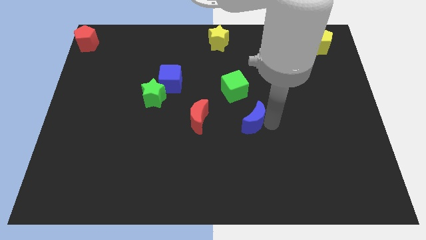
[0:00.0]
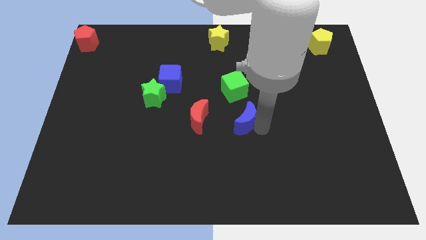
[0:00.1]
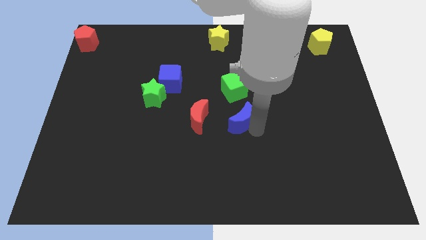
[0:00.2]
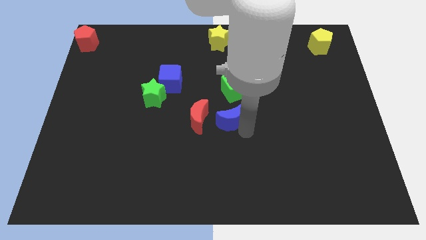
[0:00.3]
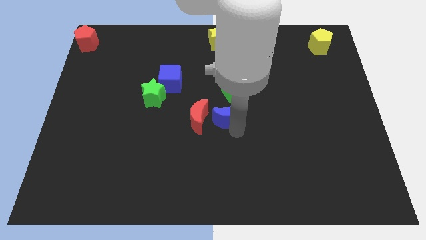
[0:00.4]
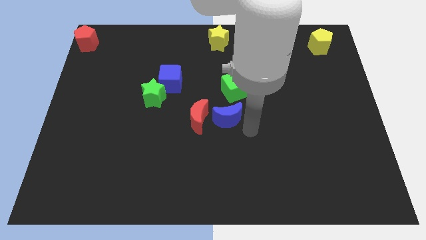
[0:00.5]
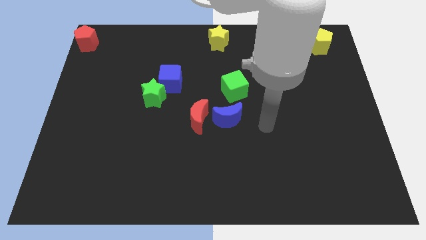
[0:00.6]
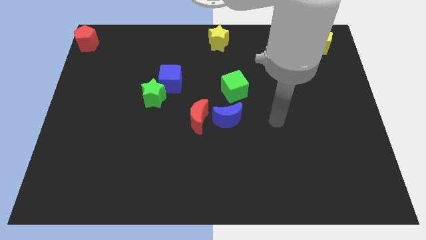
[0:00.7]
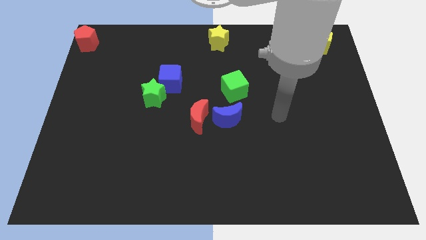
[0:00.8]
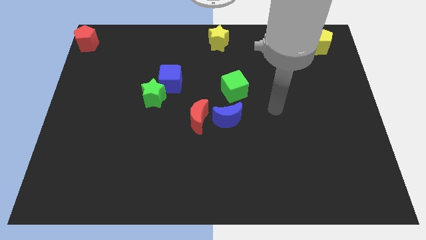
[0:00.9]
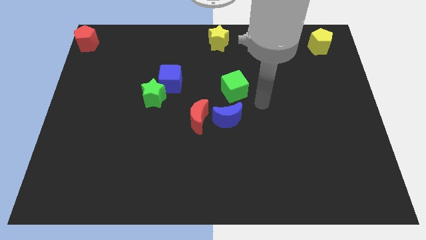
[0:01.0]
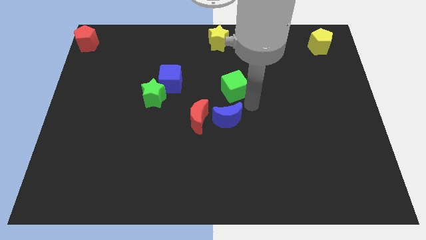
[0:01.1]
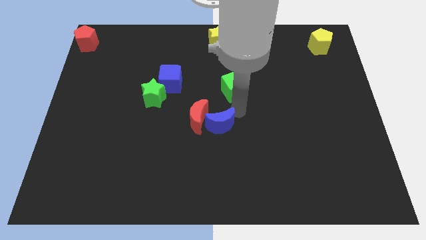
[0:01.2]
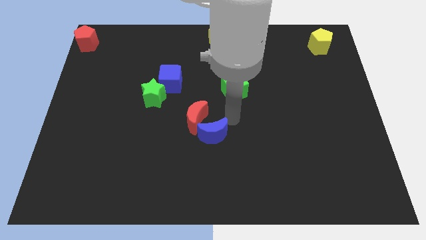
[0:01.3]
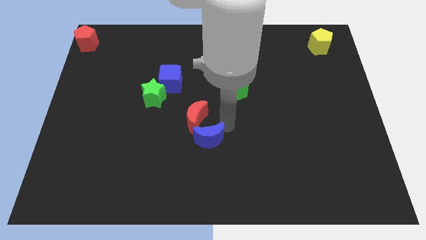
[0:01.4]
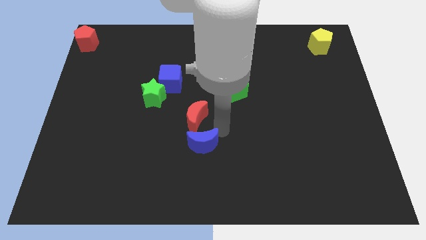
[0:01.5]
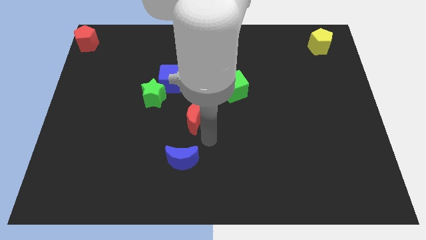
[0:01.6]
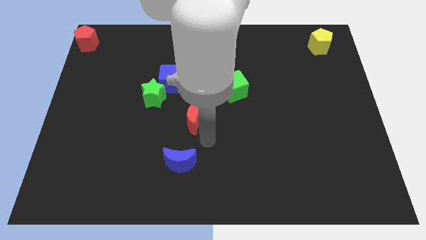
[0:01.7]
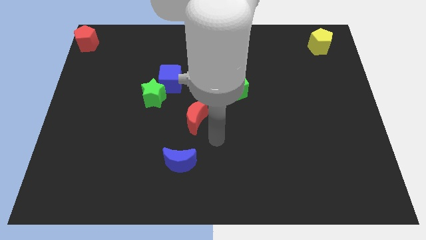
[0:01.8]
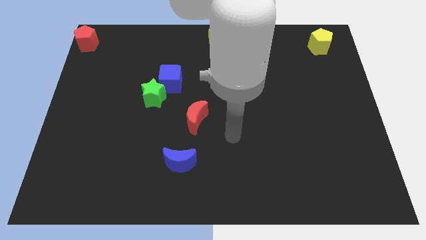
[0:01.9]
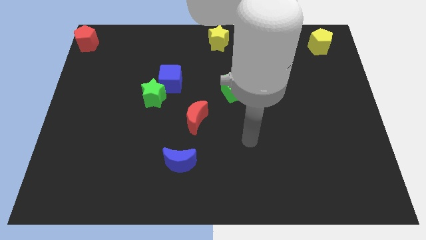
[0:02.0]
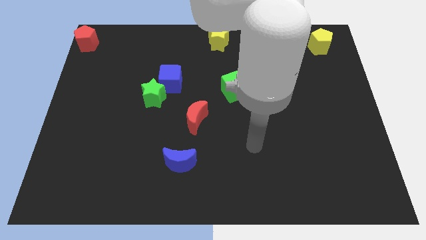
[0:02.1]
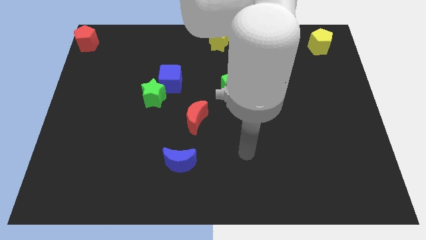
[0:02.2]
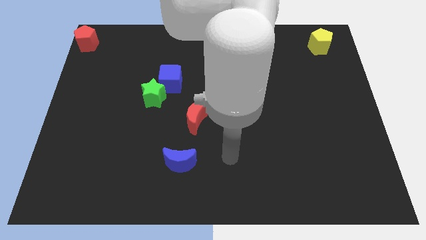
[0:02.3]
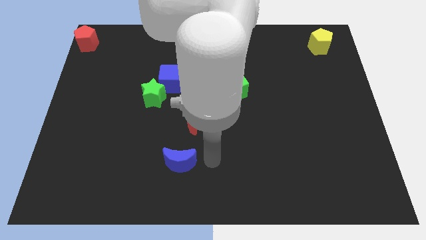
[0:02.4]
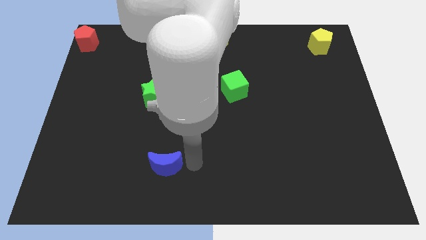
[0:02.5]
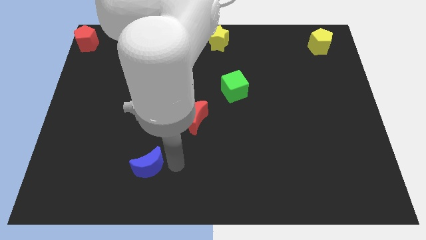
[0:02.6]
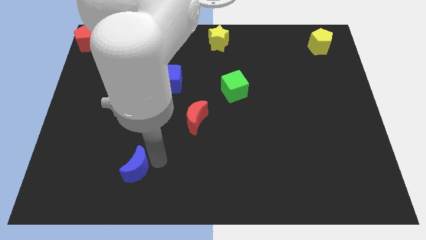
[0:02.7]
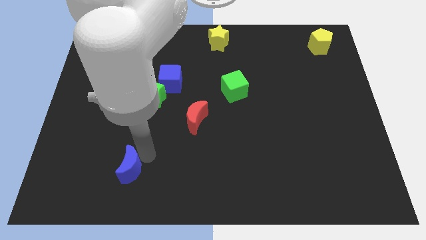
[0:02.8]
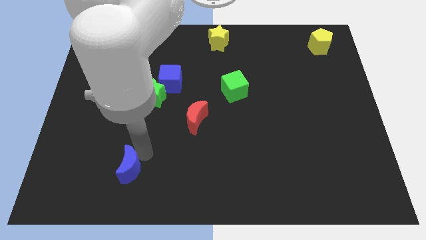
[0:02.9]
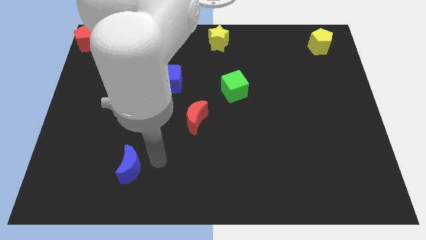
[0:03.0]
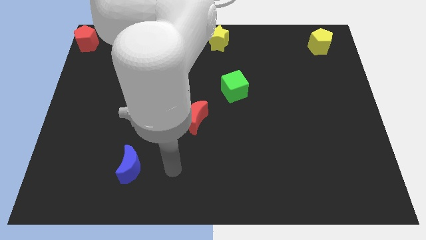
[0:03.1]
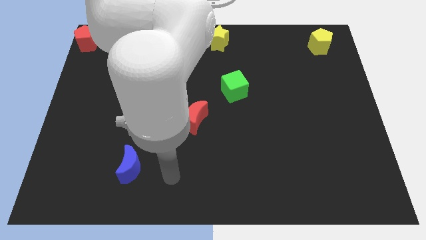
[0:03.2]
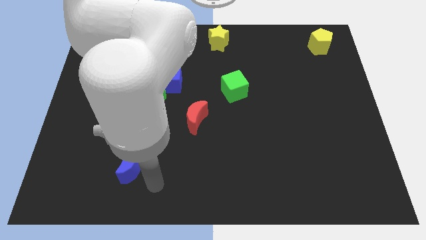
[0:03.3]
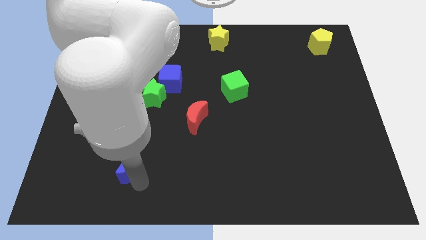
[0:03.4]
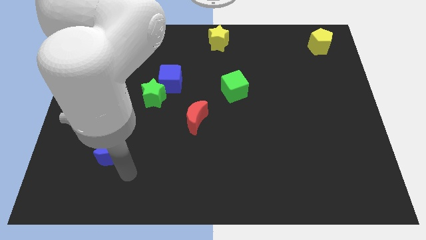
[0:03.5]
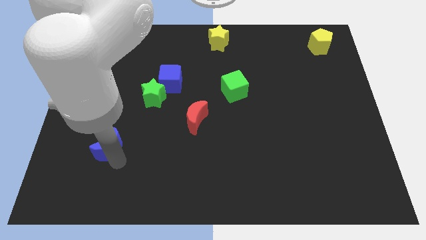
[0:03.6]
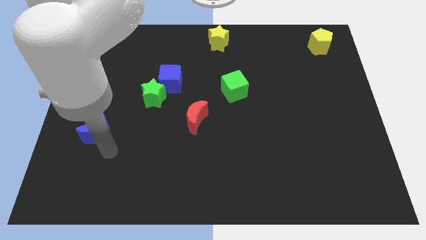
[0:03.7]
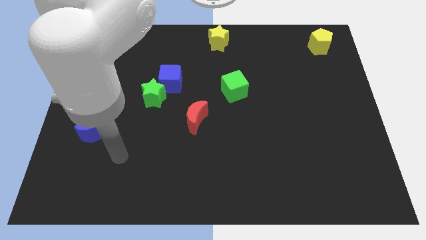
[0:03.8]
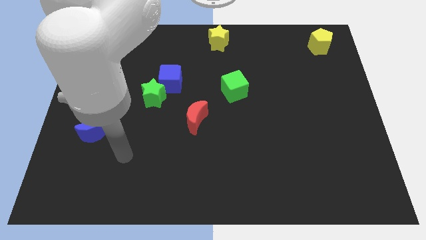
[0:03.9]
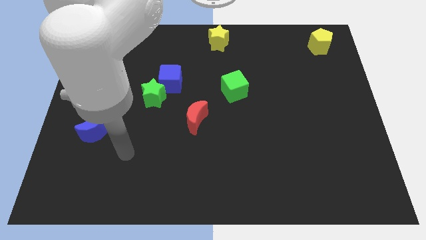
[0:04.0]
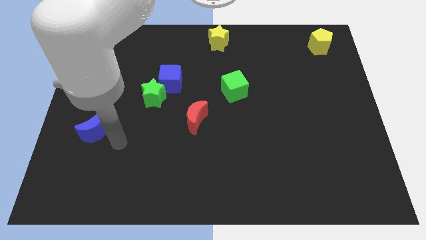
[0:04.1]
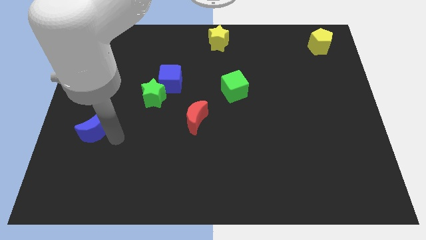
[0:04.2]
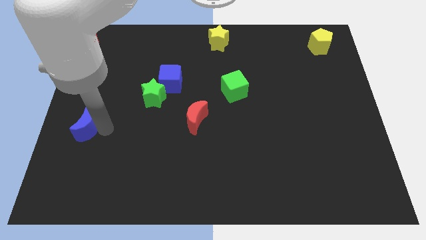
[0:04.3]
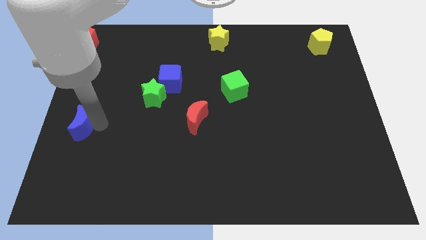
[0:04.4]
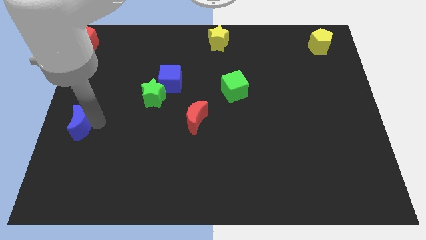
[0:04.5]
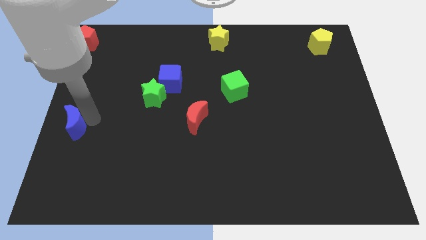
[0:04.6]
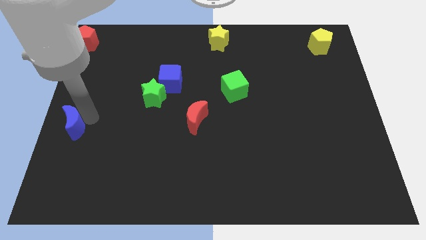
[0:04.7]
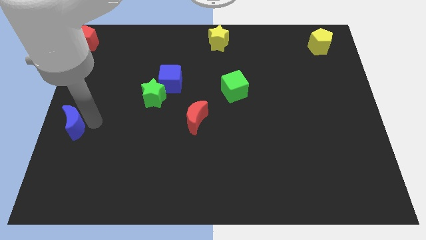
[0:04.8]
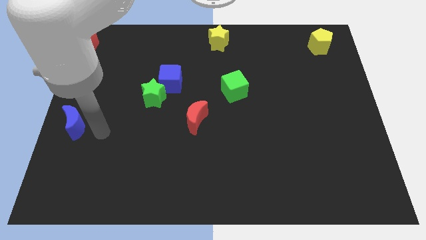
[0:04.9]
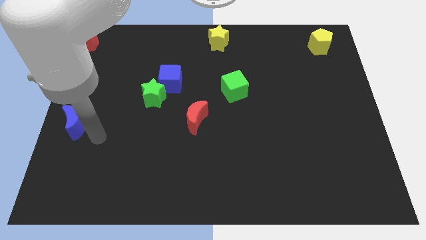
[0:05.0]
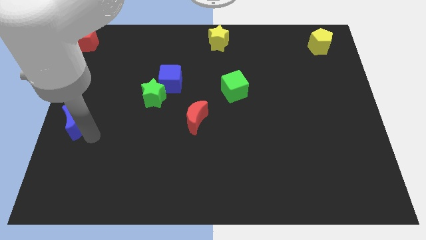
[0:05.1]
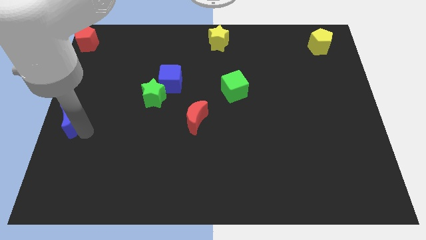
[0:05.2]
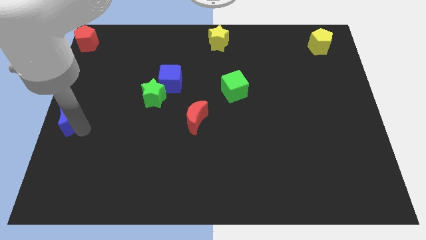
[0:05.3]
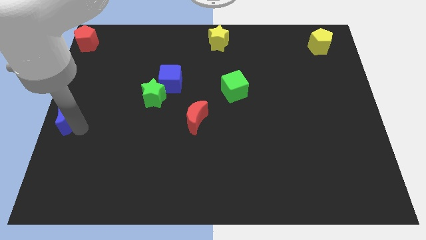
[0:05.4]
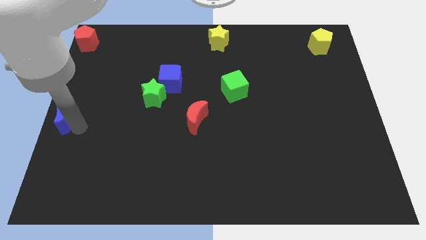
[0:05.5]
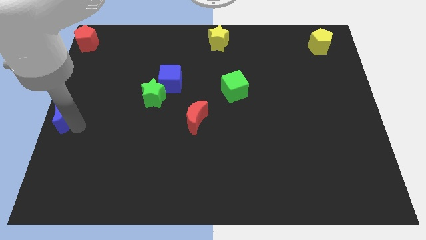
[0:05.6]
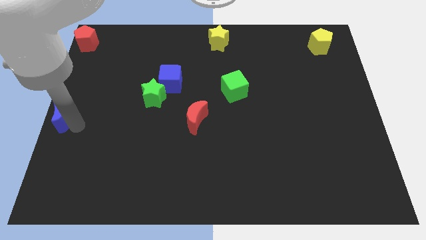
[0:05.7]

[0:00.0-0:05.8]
push the blue crescent to the center left side of the board

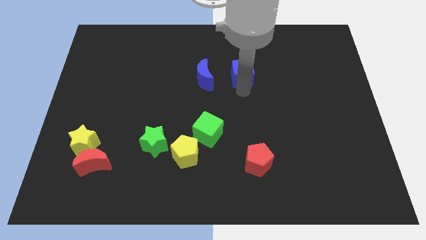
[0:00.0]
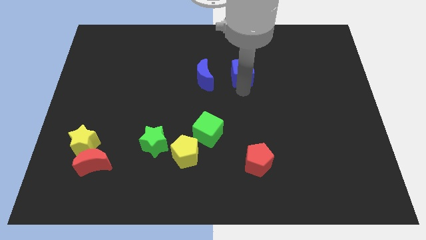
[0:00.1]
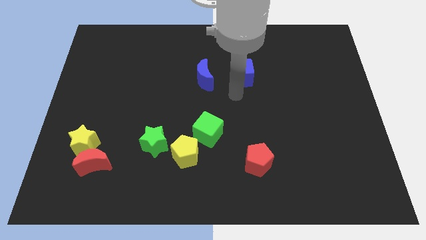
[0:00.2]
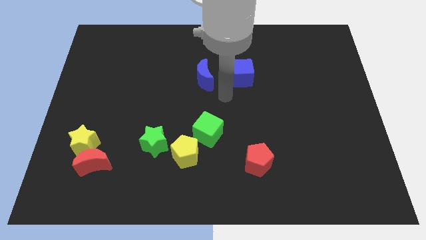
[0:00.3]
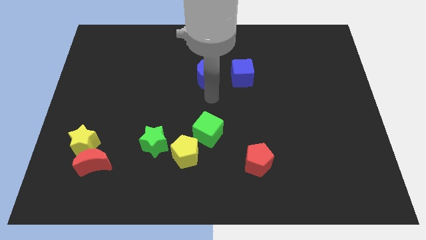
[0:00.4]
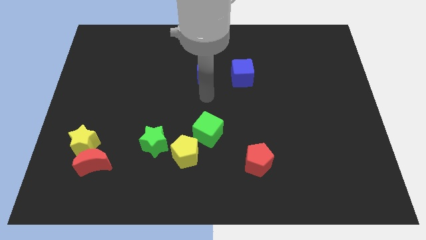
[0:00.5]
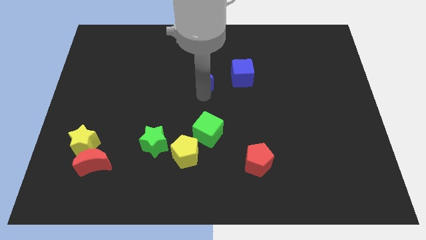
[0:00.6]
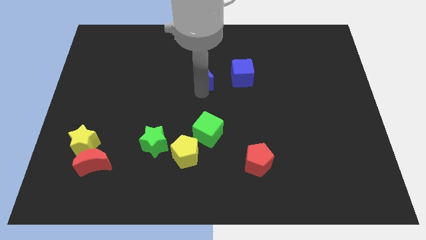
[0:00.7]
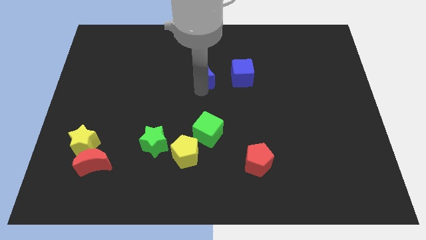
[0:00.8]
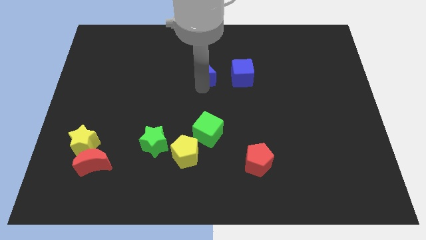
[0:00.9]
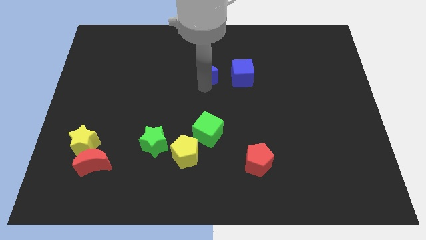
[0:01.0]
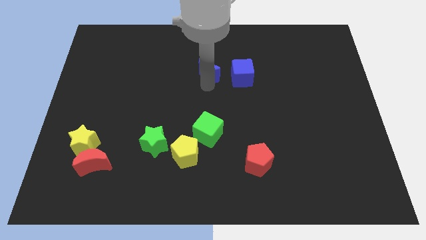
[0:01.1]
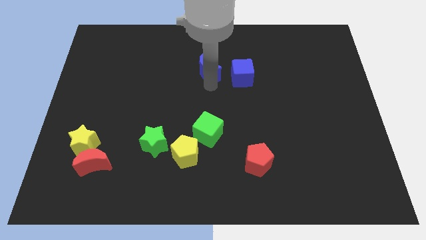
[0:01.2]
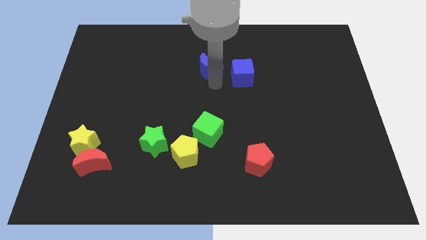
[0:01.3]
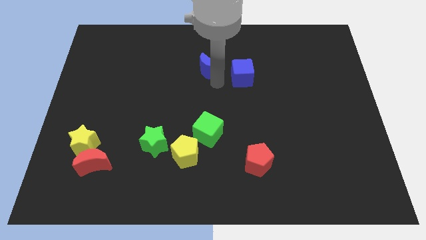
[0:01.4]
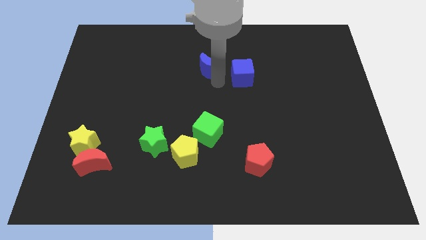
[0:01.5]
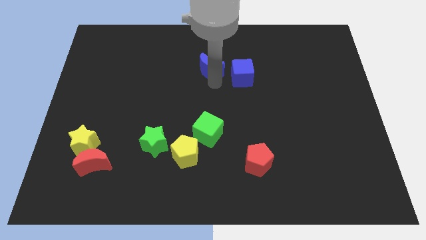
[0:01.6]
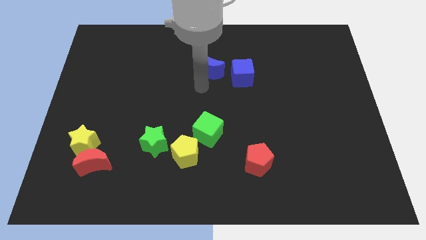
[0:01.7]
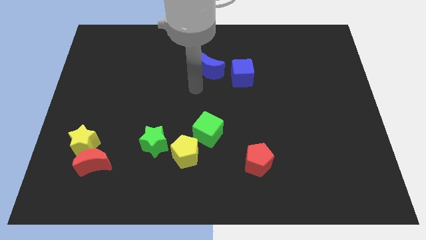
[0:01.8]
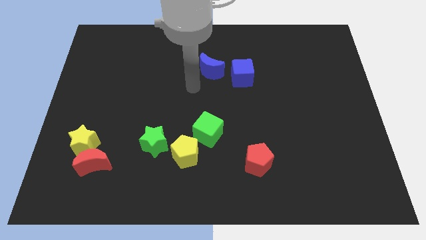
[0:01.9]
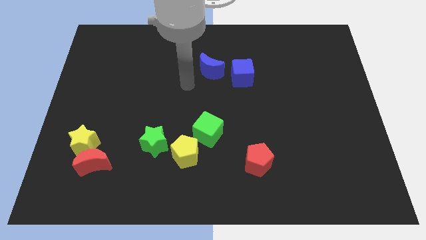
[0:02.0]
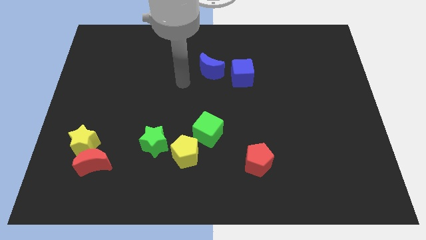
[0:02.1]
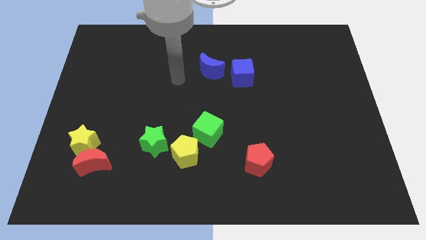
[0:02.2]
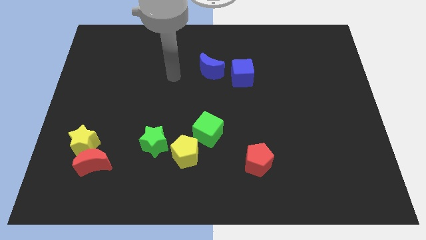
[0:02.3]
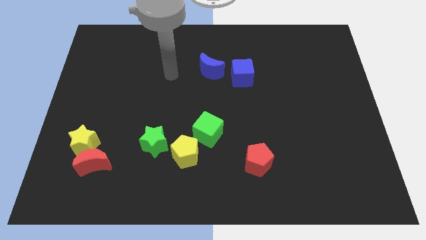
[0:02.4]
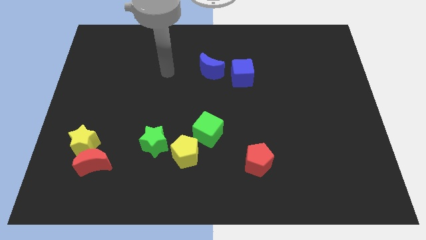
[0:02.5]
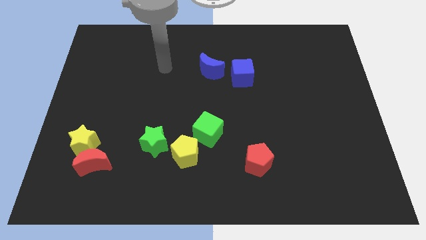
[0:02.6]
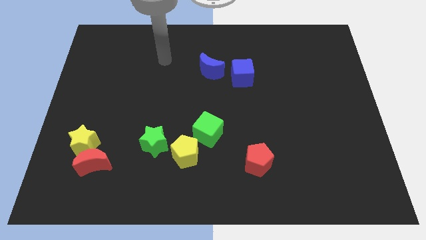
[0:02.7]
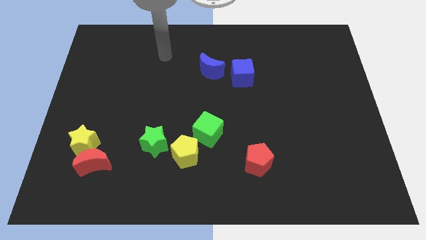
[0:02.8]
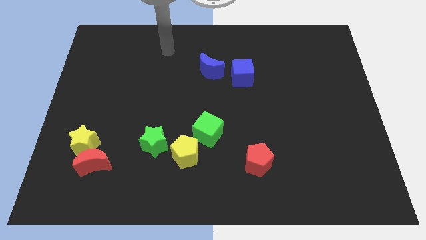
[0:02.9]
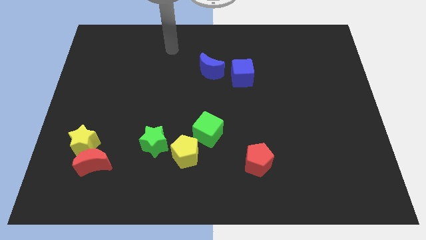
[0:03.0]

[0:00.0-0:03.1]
move blue moon towards blue cube
